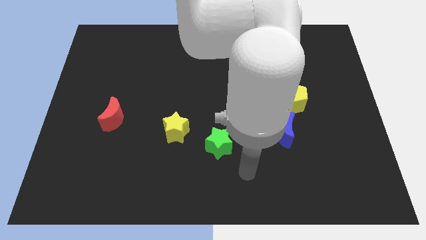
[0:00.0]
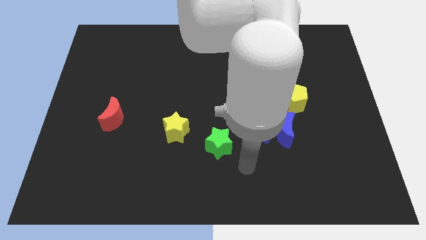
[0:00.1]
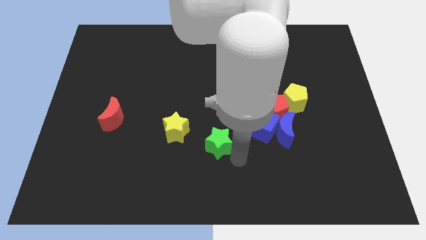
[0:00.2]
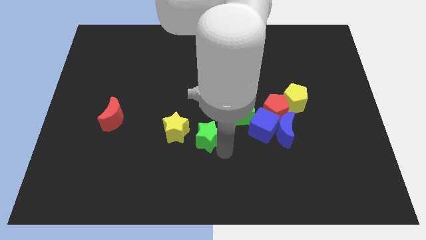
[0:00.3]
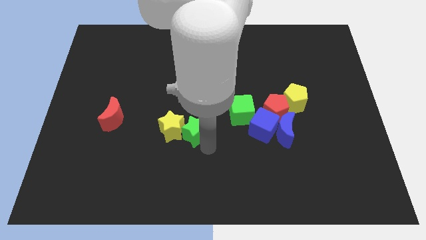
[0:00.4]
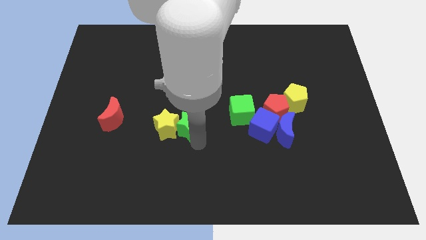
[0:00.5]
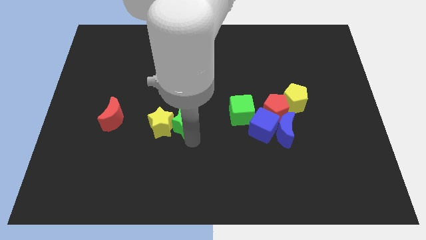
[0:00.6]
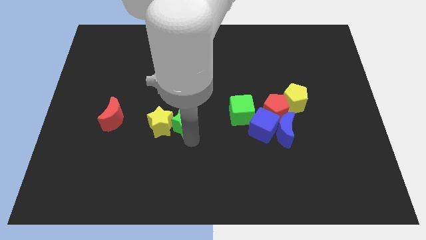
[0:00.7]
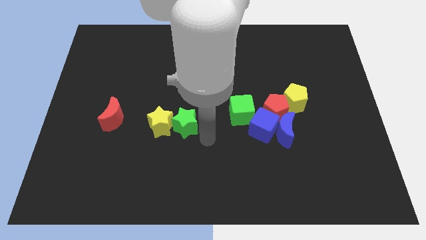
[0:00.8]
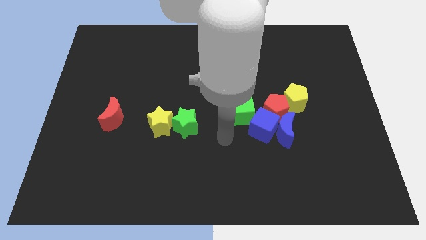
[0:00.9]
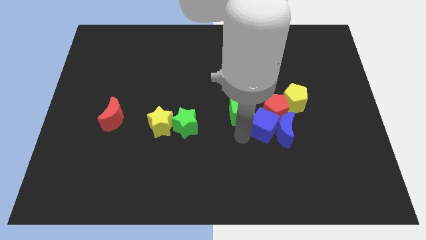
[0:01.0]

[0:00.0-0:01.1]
move green star into yellow star

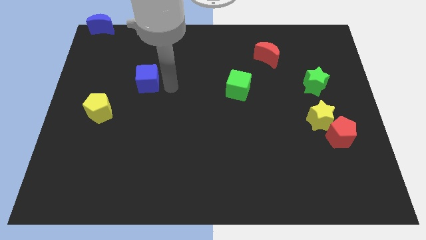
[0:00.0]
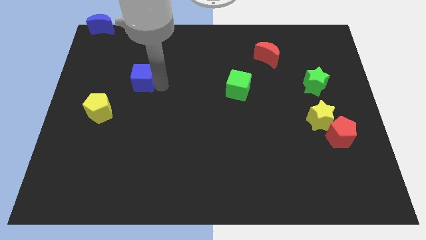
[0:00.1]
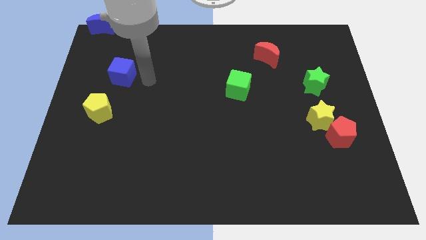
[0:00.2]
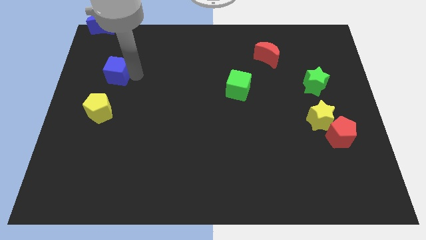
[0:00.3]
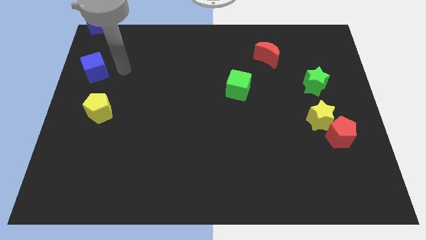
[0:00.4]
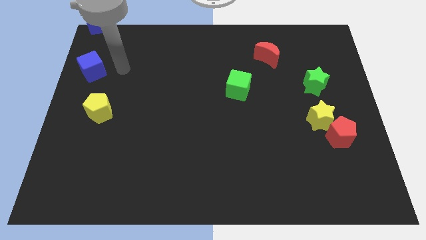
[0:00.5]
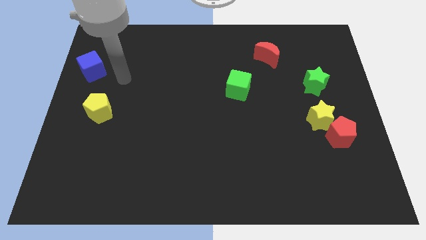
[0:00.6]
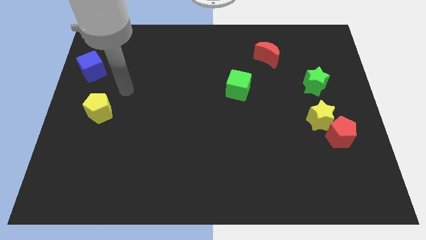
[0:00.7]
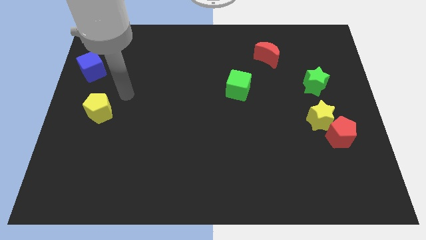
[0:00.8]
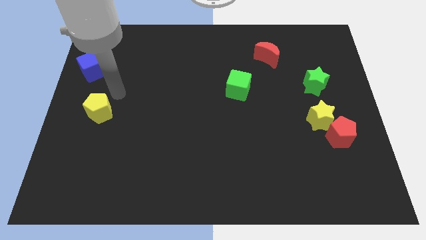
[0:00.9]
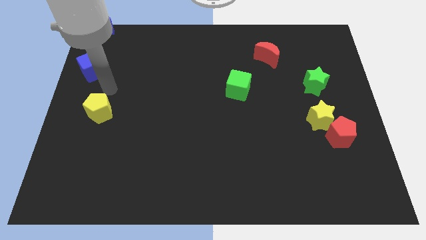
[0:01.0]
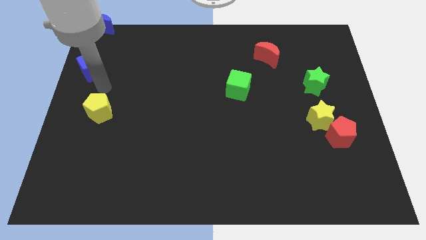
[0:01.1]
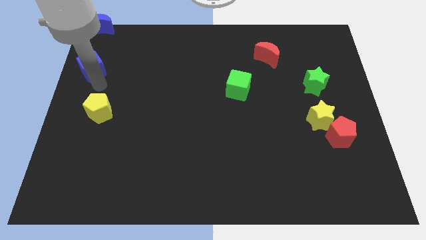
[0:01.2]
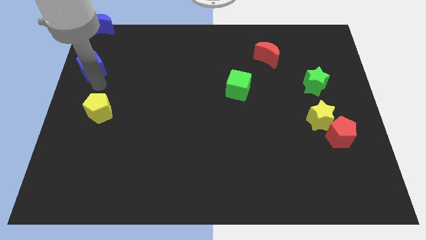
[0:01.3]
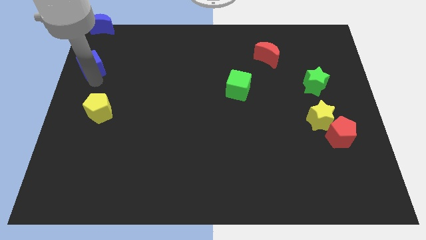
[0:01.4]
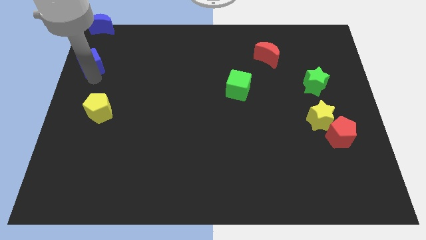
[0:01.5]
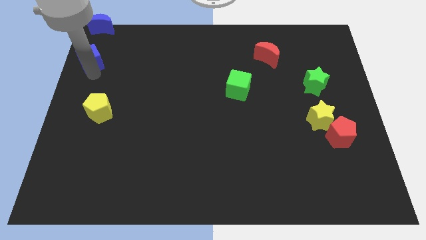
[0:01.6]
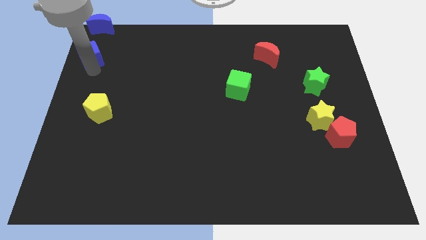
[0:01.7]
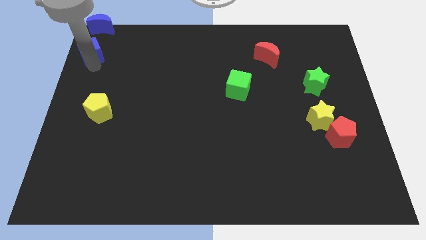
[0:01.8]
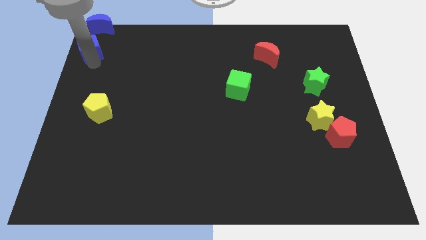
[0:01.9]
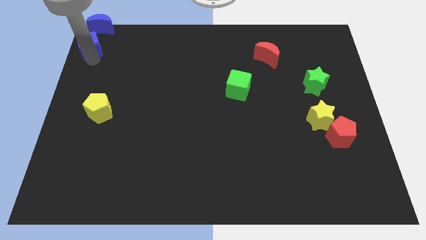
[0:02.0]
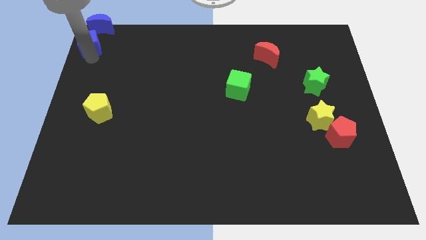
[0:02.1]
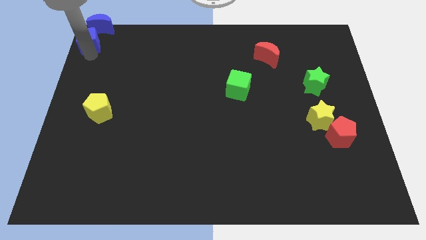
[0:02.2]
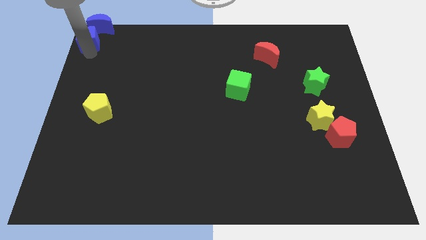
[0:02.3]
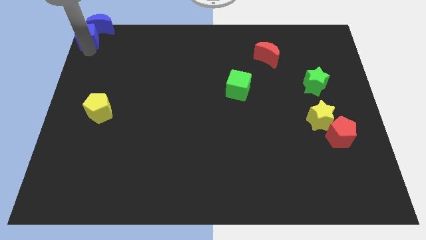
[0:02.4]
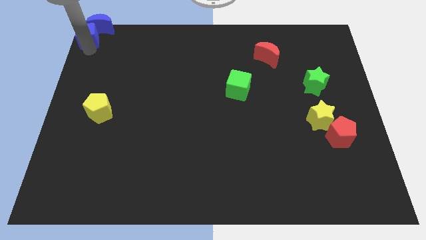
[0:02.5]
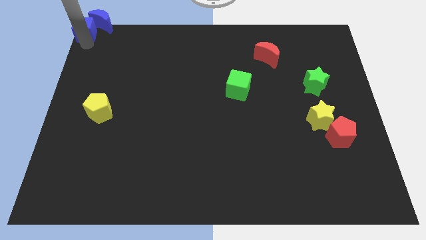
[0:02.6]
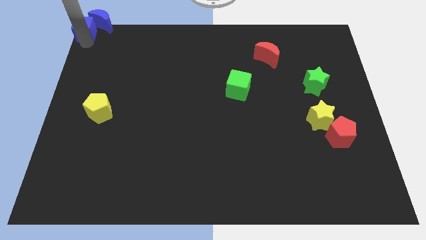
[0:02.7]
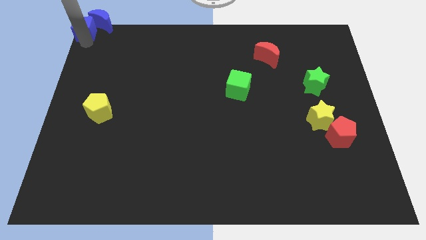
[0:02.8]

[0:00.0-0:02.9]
push the blue cube towards the top left corner of the board

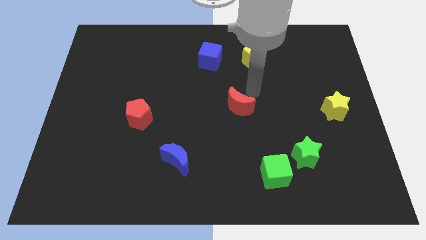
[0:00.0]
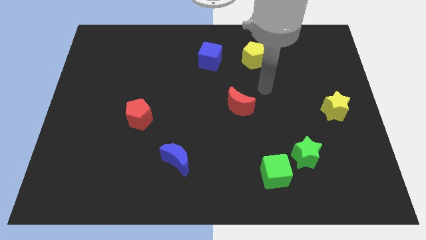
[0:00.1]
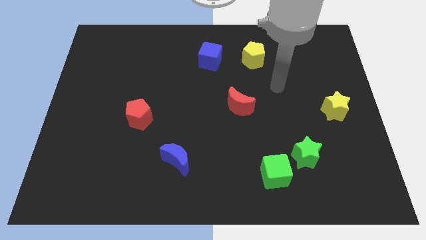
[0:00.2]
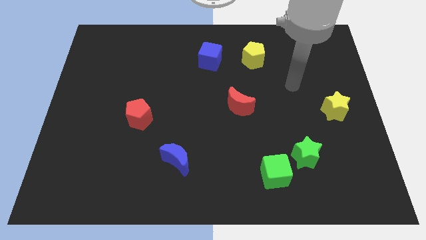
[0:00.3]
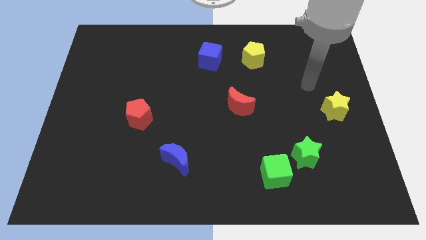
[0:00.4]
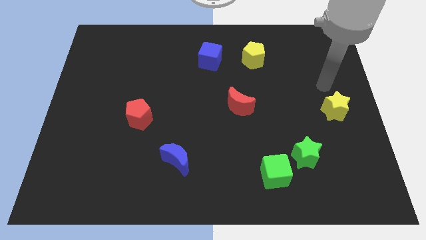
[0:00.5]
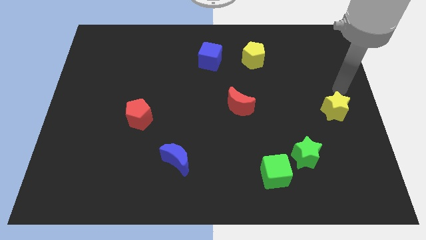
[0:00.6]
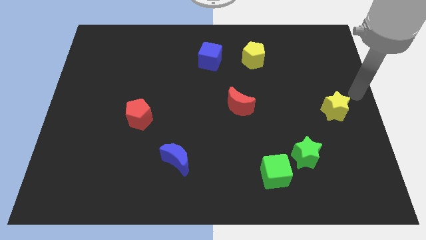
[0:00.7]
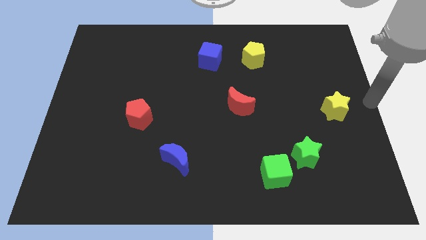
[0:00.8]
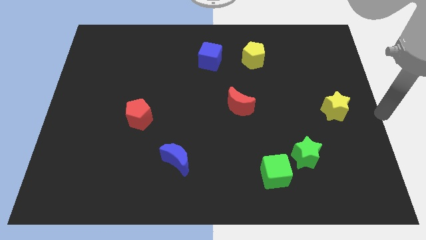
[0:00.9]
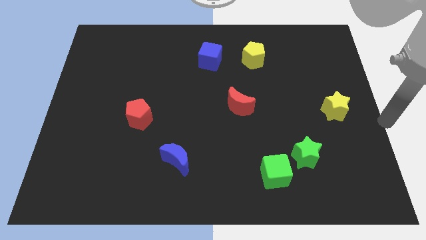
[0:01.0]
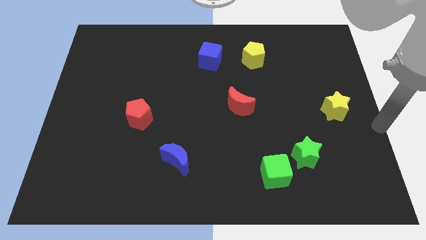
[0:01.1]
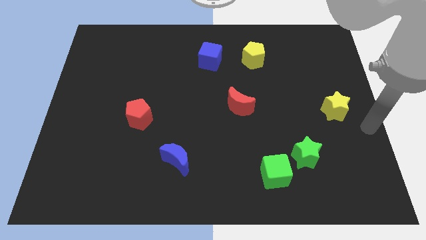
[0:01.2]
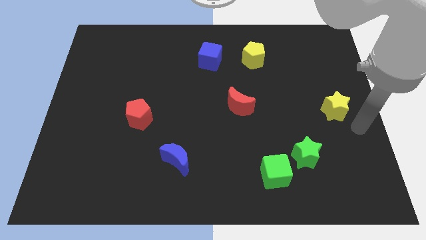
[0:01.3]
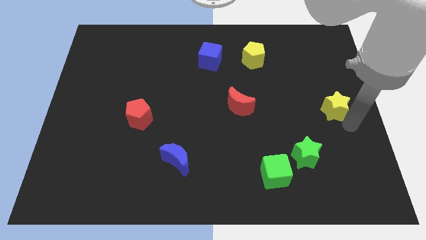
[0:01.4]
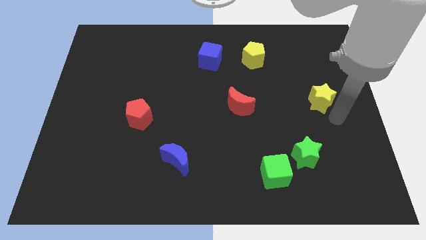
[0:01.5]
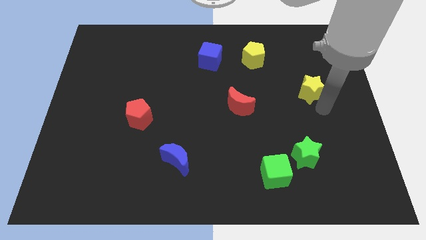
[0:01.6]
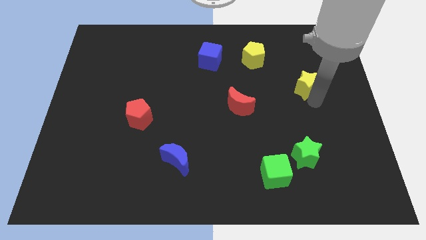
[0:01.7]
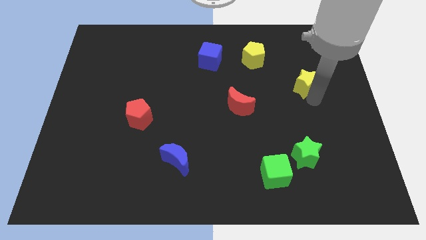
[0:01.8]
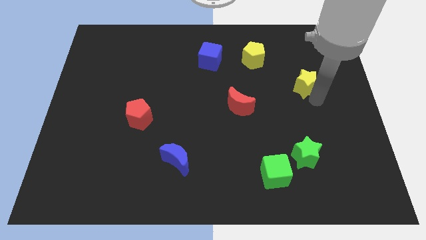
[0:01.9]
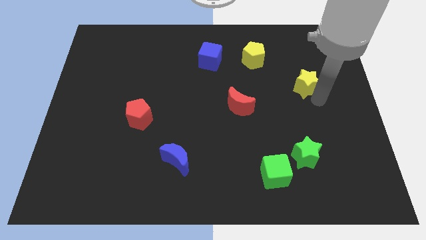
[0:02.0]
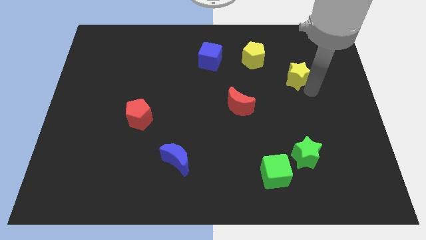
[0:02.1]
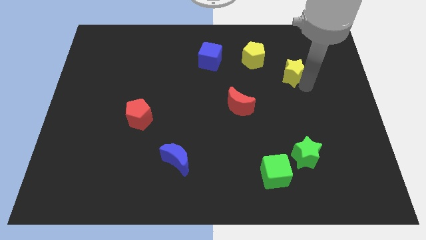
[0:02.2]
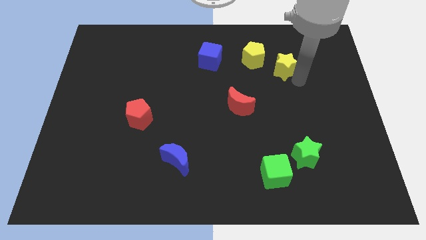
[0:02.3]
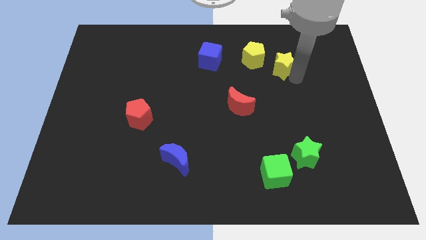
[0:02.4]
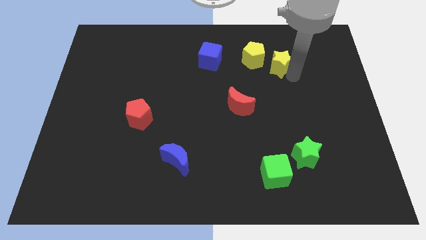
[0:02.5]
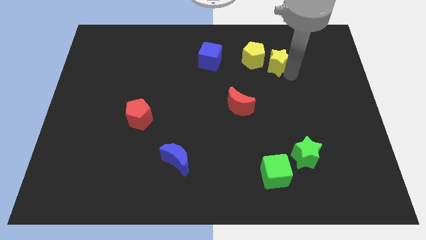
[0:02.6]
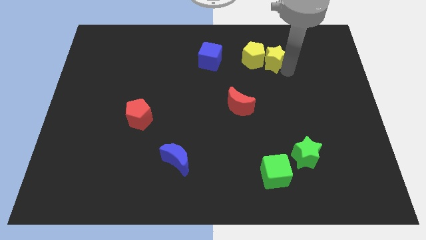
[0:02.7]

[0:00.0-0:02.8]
move the yellow star close to the yellow pentagon

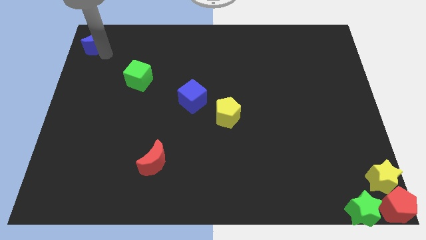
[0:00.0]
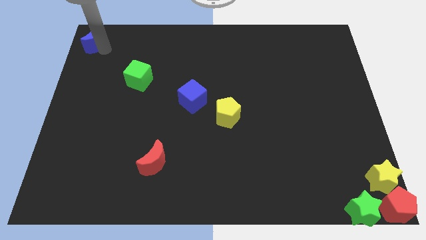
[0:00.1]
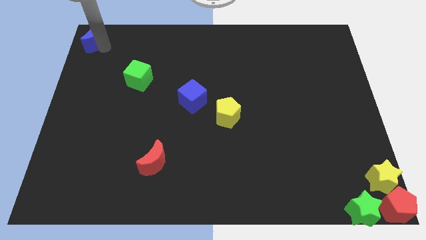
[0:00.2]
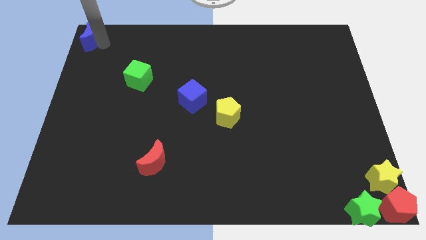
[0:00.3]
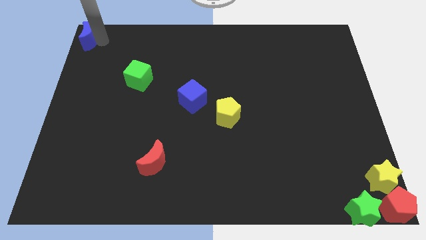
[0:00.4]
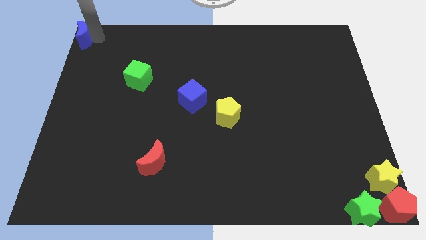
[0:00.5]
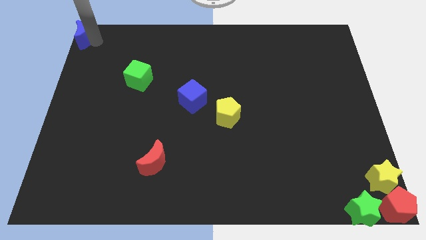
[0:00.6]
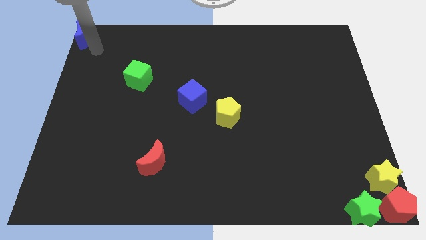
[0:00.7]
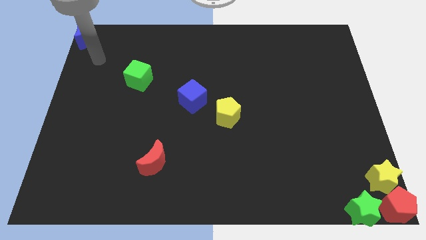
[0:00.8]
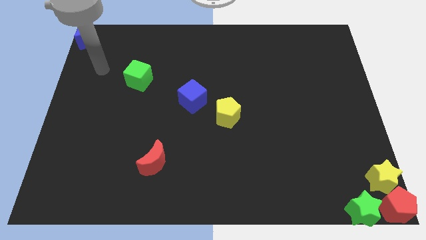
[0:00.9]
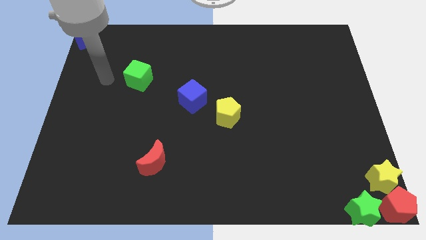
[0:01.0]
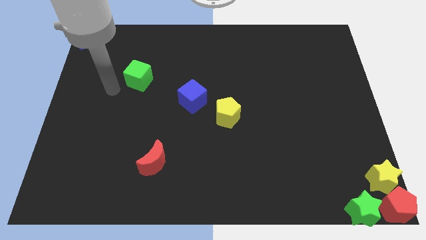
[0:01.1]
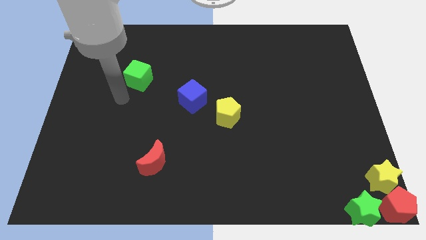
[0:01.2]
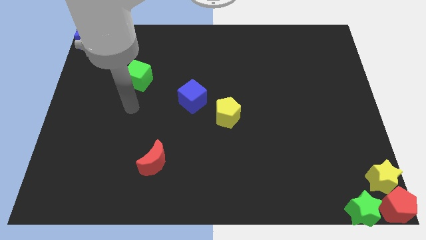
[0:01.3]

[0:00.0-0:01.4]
place the blue crescent at the top left corner of the board

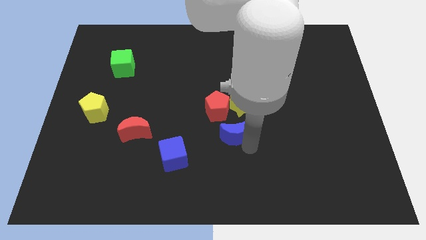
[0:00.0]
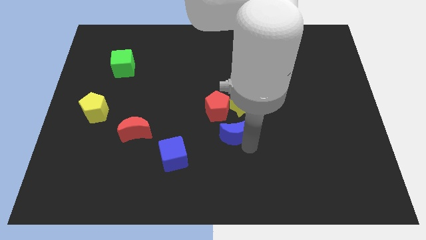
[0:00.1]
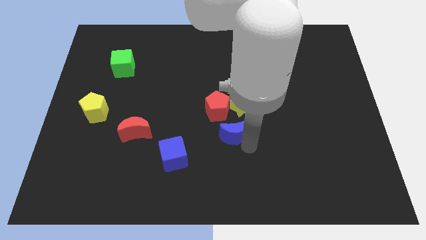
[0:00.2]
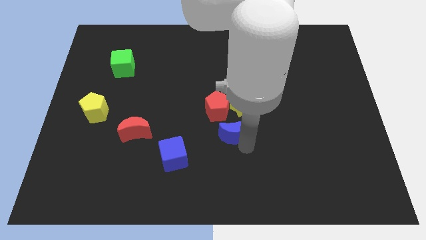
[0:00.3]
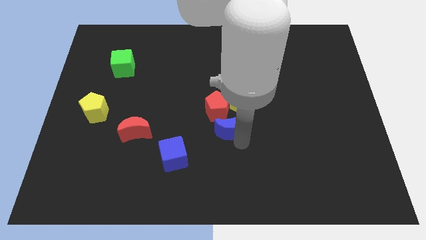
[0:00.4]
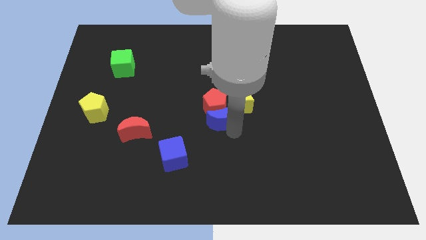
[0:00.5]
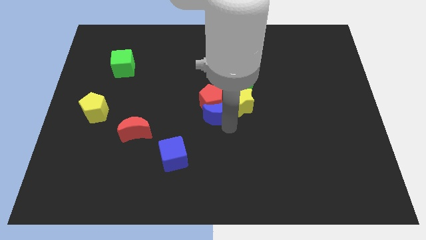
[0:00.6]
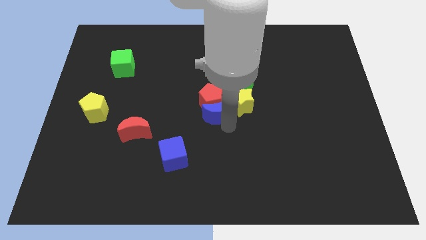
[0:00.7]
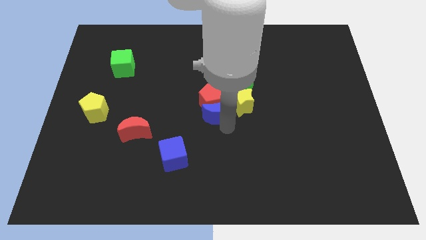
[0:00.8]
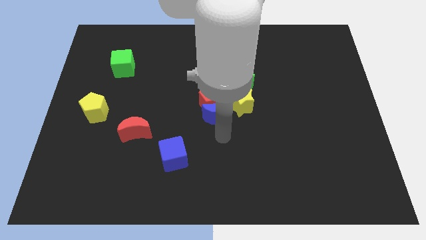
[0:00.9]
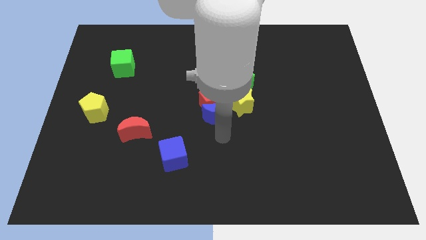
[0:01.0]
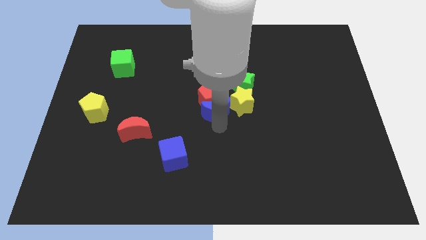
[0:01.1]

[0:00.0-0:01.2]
move the blue crescent below the red pentagon
